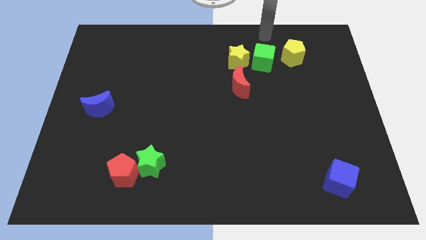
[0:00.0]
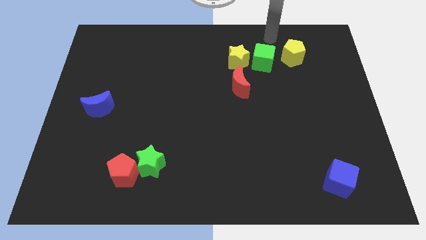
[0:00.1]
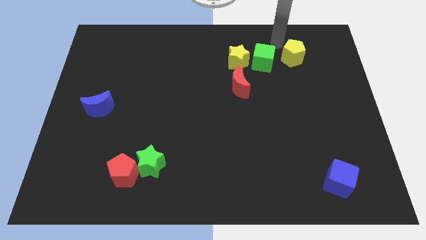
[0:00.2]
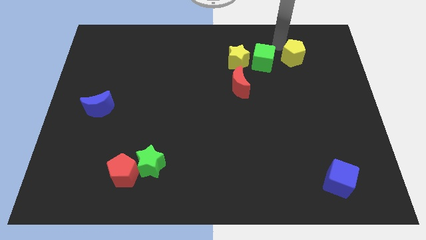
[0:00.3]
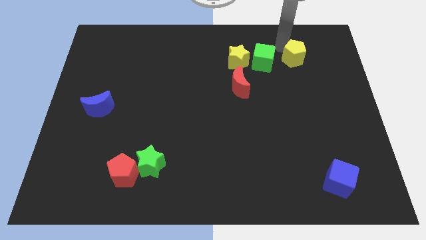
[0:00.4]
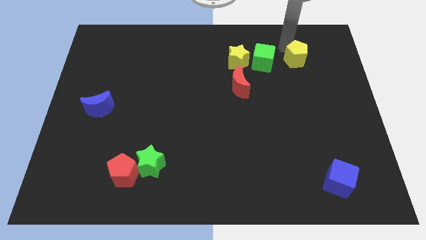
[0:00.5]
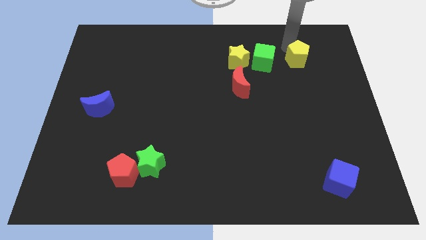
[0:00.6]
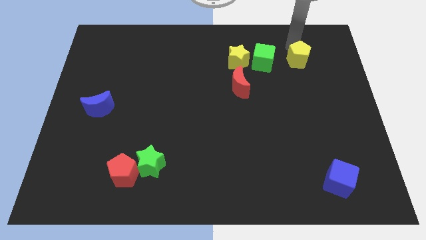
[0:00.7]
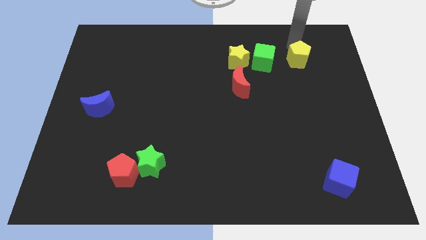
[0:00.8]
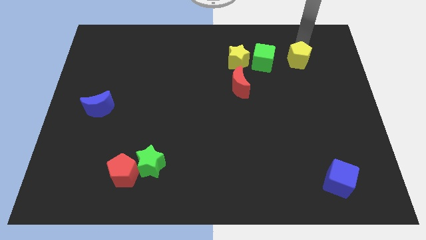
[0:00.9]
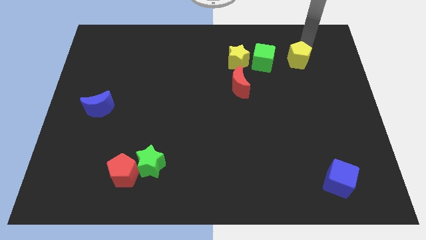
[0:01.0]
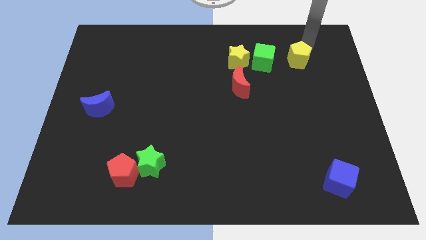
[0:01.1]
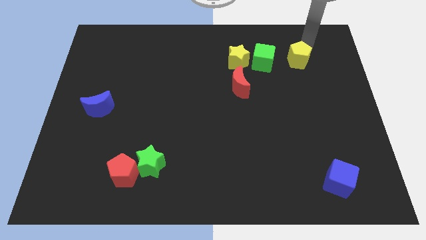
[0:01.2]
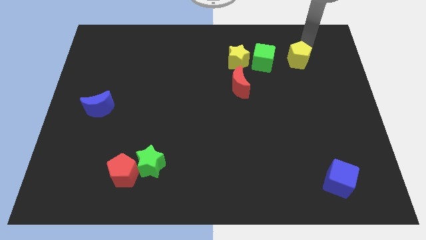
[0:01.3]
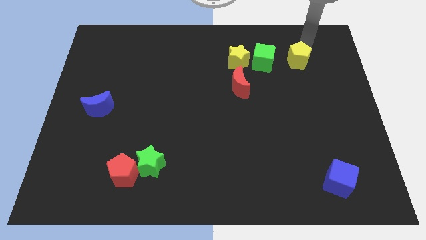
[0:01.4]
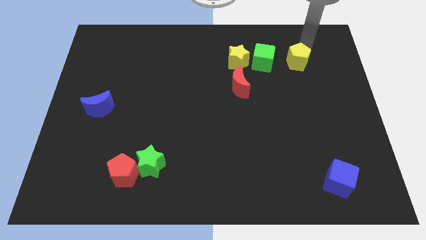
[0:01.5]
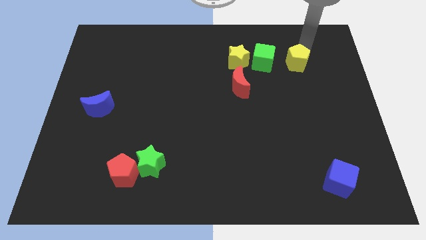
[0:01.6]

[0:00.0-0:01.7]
push the yellow pentagon slightly to the bottom

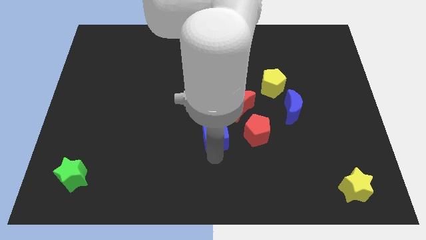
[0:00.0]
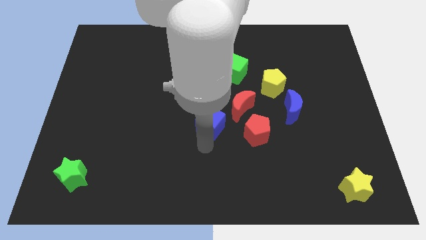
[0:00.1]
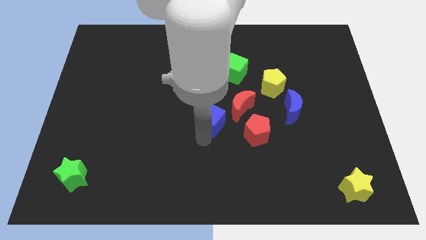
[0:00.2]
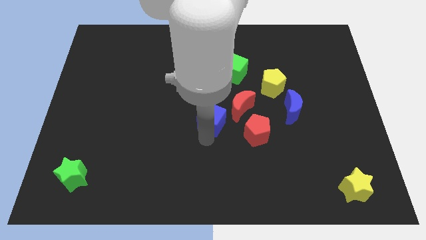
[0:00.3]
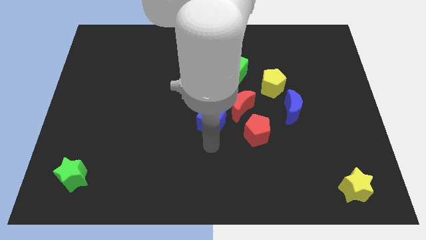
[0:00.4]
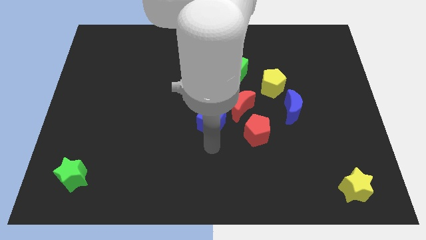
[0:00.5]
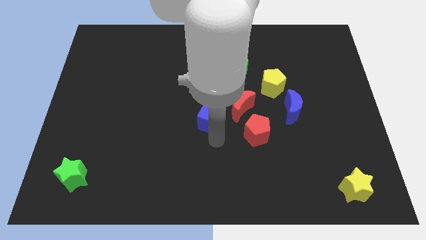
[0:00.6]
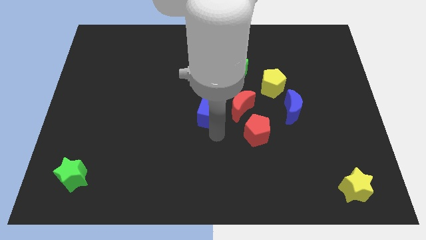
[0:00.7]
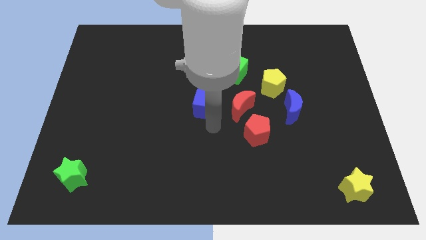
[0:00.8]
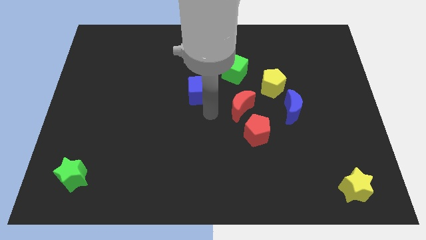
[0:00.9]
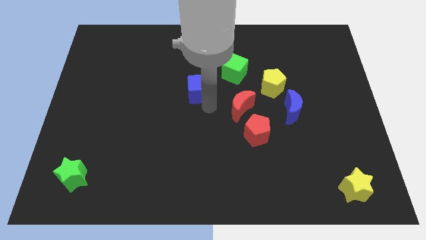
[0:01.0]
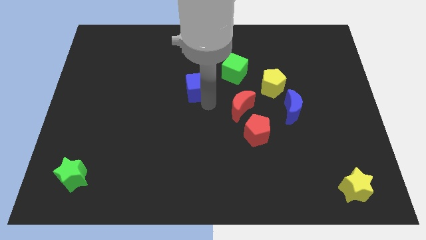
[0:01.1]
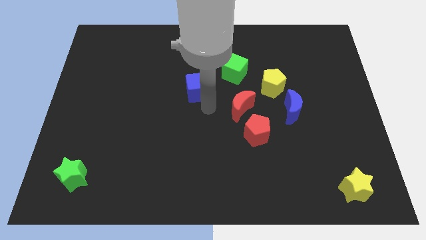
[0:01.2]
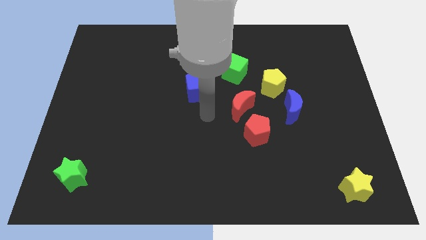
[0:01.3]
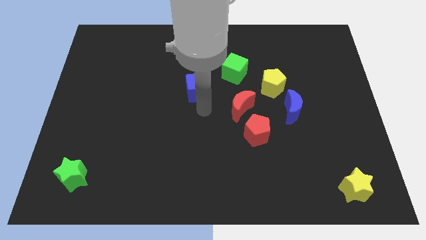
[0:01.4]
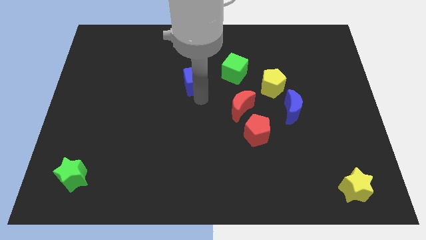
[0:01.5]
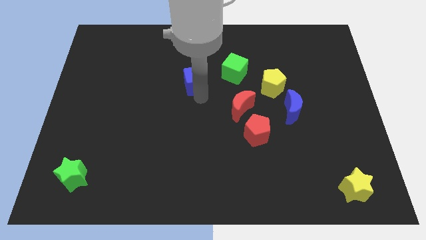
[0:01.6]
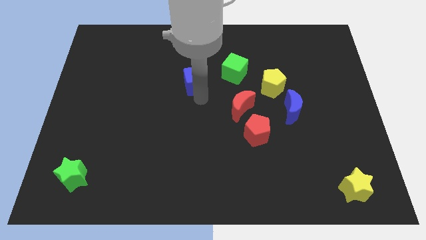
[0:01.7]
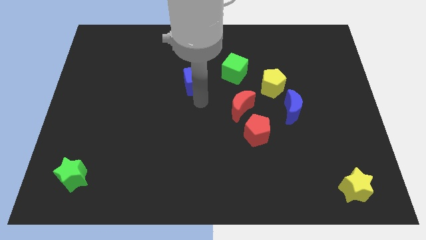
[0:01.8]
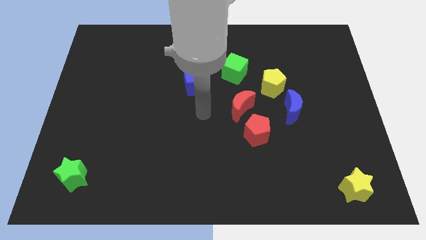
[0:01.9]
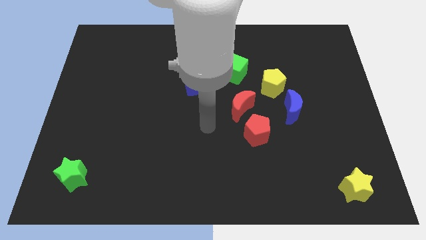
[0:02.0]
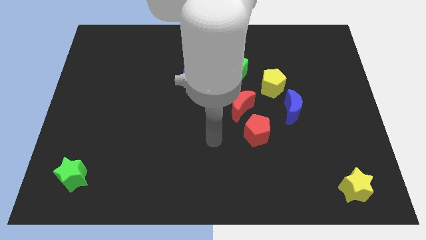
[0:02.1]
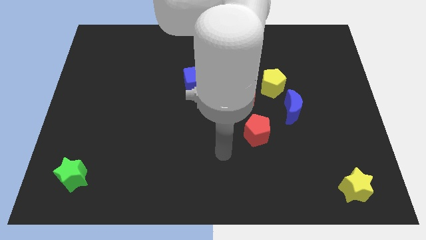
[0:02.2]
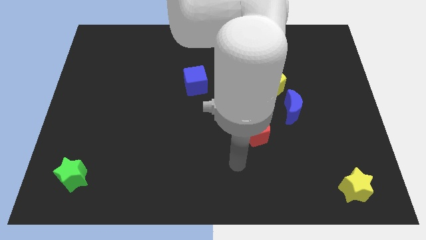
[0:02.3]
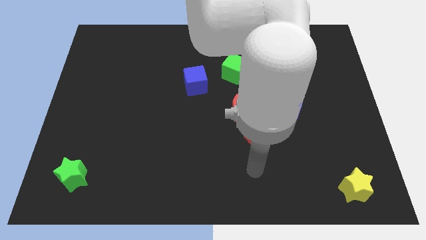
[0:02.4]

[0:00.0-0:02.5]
move the blue cube to the center of the board

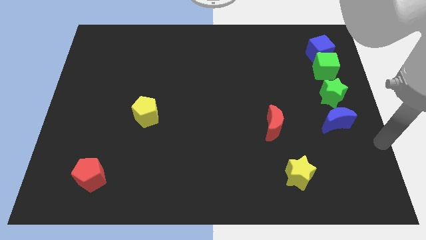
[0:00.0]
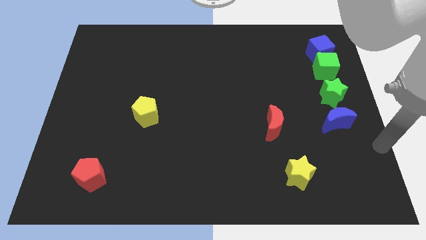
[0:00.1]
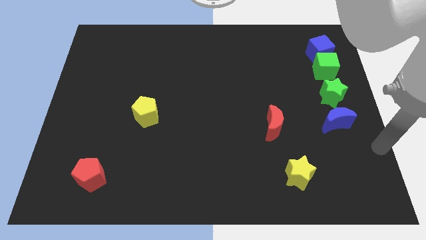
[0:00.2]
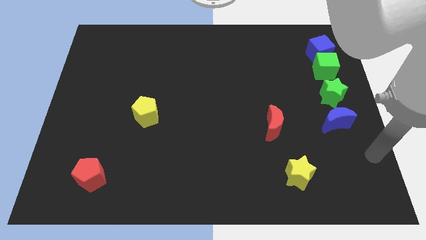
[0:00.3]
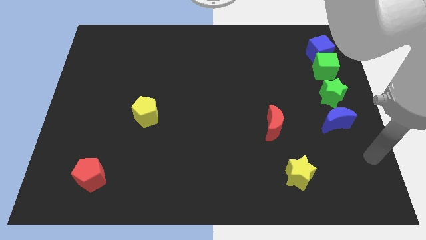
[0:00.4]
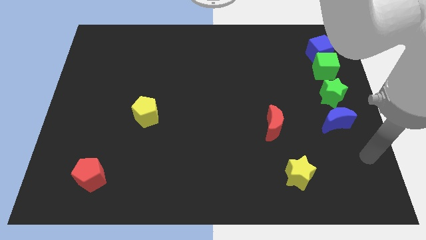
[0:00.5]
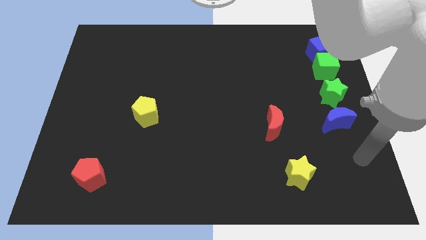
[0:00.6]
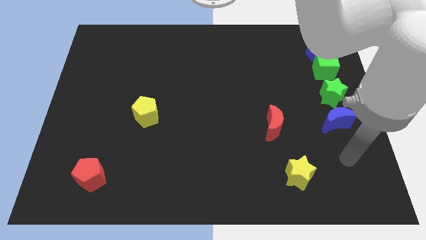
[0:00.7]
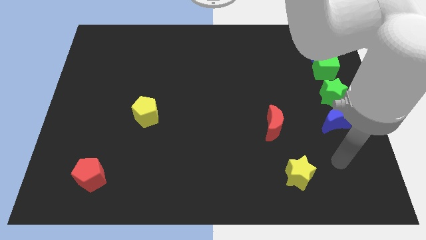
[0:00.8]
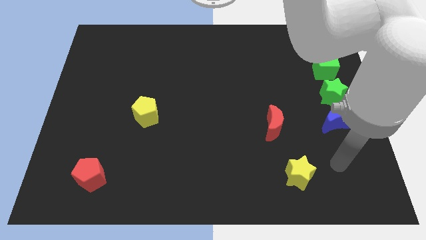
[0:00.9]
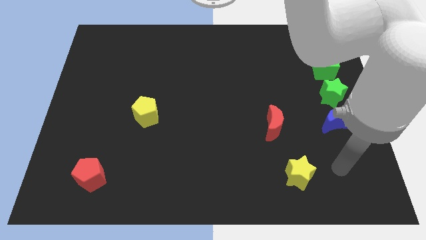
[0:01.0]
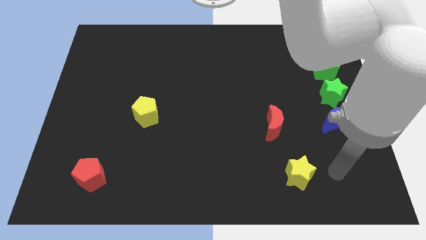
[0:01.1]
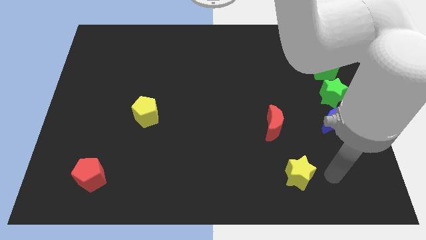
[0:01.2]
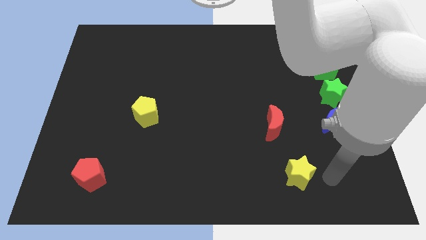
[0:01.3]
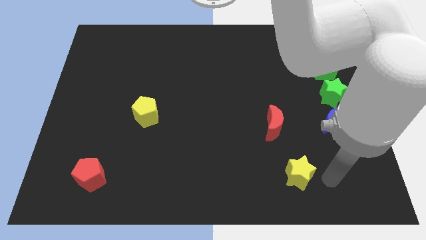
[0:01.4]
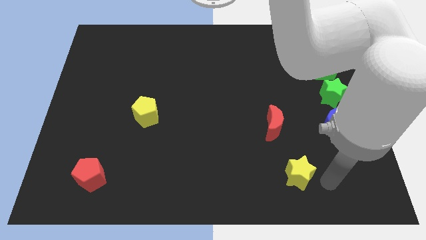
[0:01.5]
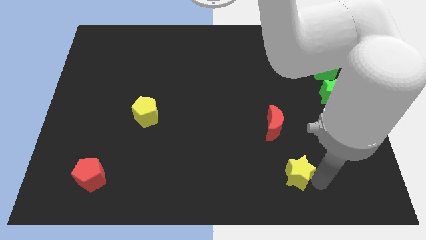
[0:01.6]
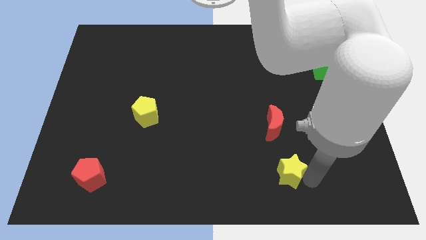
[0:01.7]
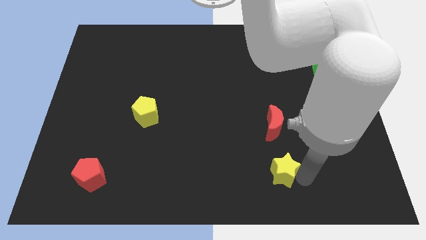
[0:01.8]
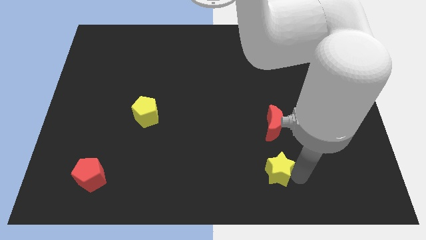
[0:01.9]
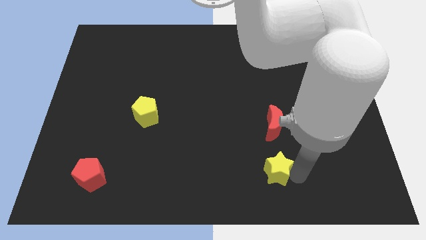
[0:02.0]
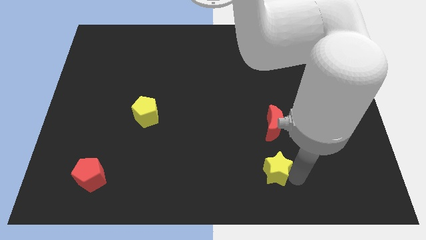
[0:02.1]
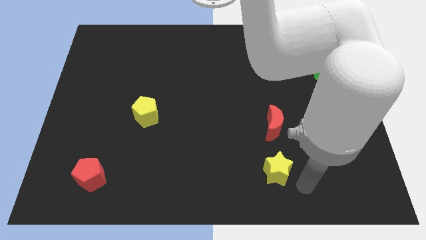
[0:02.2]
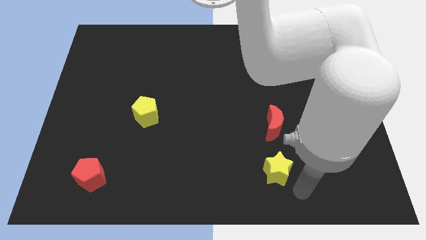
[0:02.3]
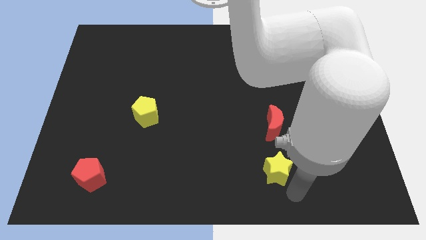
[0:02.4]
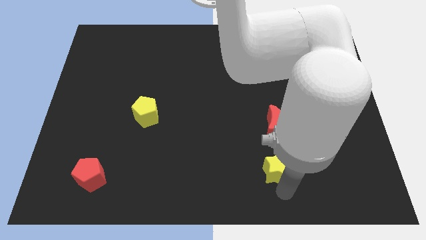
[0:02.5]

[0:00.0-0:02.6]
move the yellow star below the red crescent

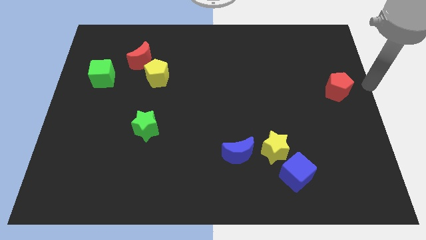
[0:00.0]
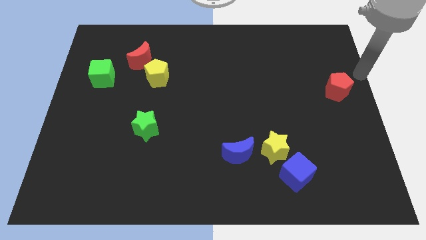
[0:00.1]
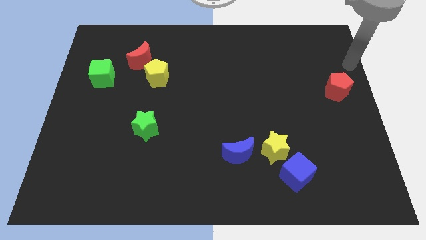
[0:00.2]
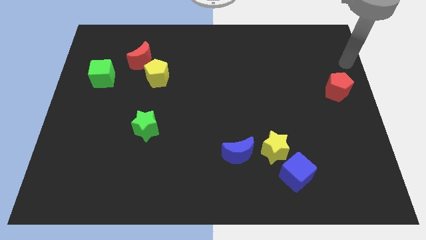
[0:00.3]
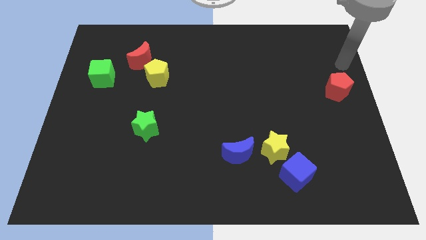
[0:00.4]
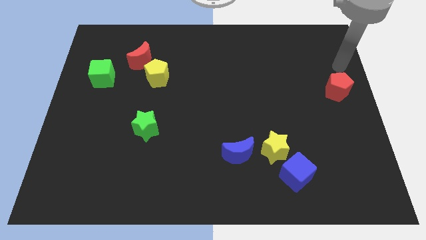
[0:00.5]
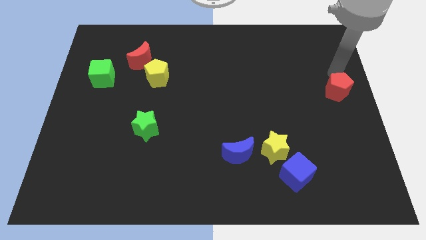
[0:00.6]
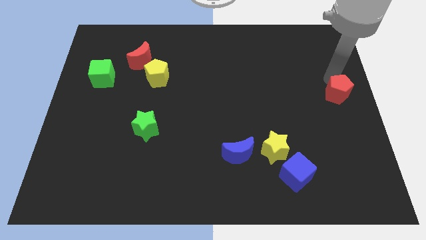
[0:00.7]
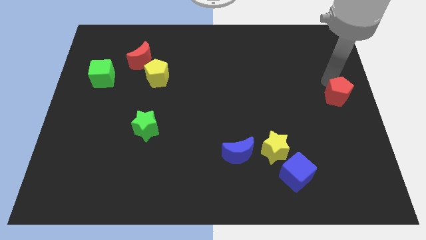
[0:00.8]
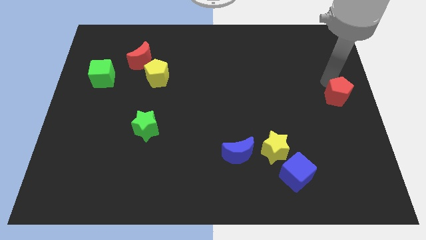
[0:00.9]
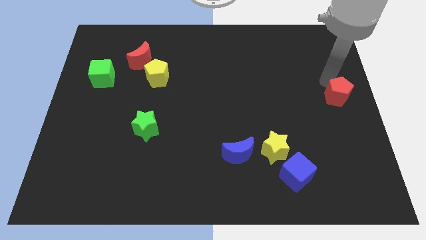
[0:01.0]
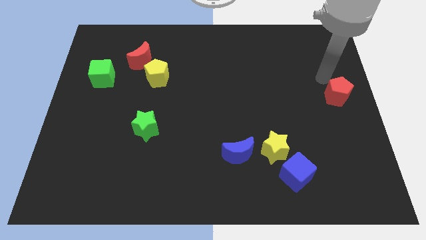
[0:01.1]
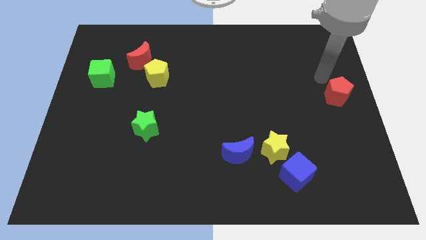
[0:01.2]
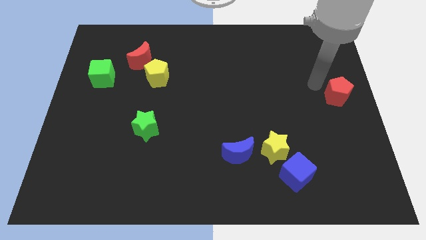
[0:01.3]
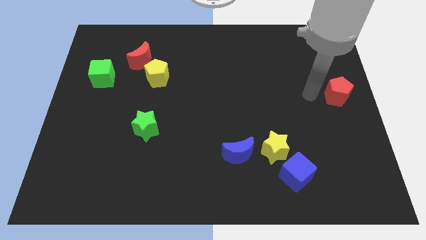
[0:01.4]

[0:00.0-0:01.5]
point your arm left to red pentagon

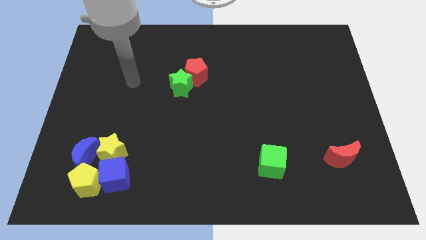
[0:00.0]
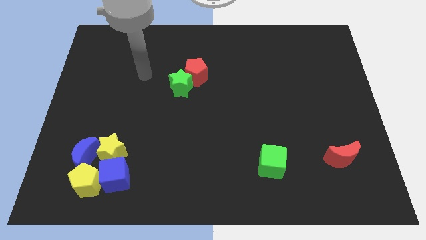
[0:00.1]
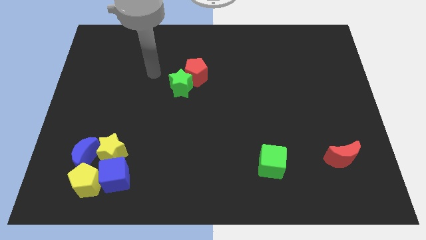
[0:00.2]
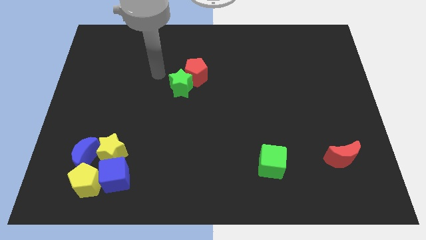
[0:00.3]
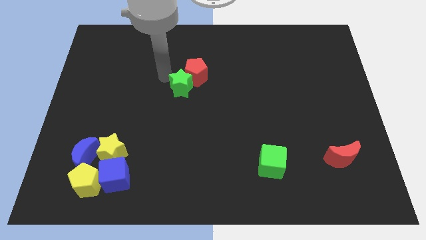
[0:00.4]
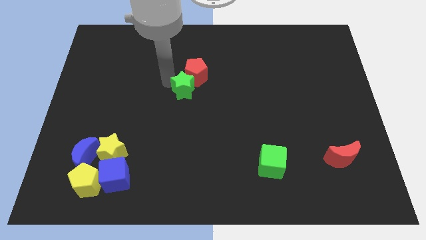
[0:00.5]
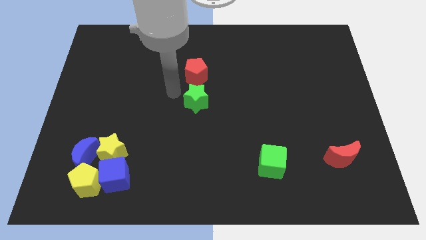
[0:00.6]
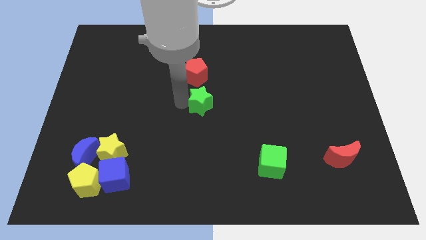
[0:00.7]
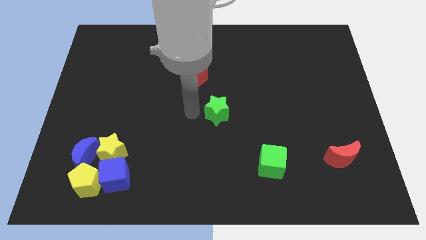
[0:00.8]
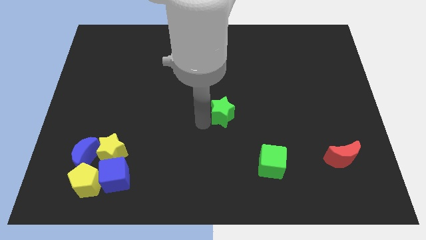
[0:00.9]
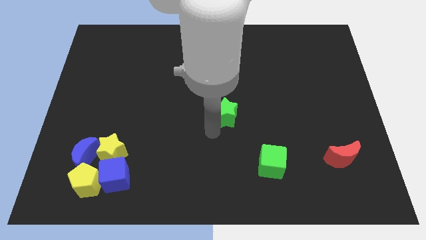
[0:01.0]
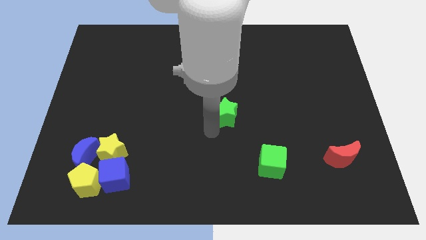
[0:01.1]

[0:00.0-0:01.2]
move green star to the center
